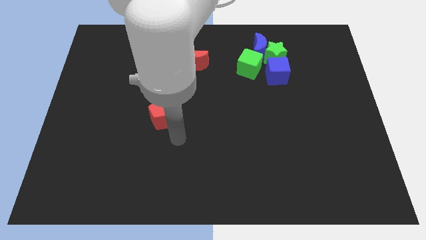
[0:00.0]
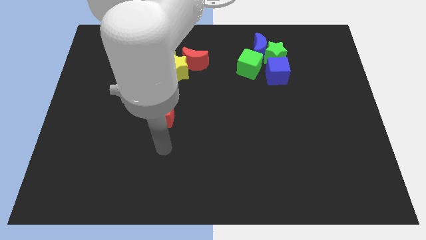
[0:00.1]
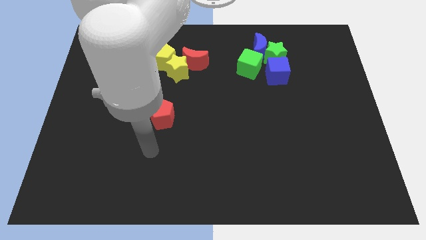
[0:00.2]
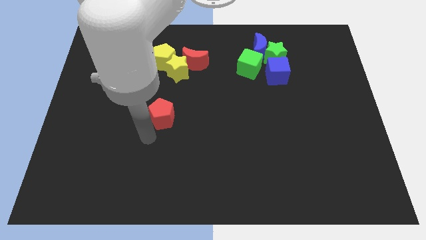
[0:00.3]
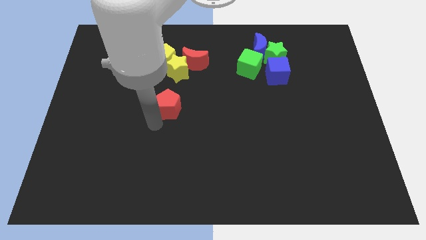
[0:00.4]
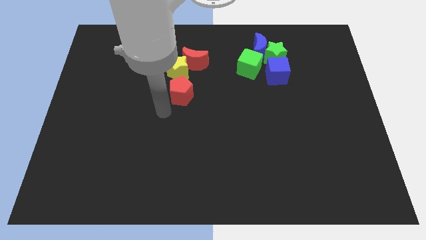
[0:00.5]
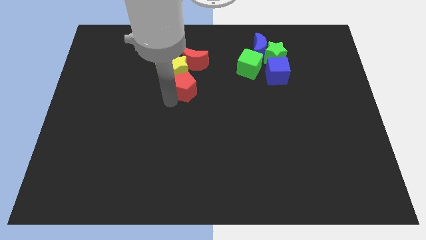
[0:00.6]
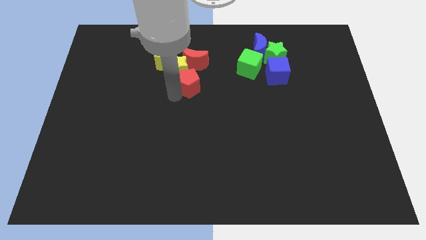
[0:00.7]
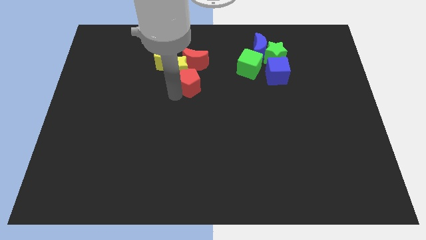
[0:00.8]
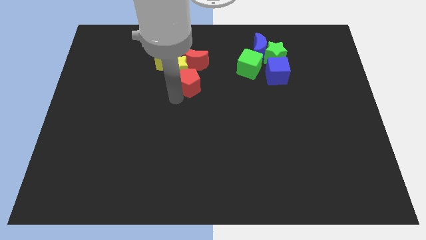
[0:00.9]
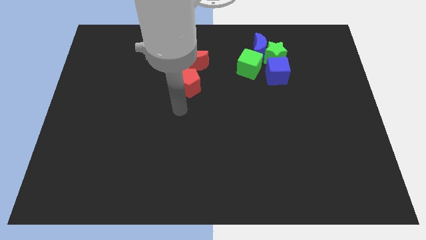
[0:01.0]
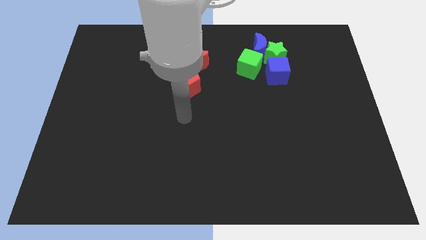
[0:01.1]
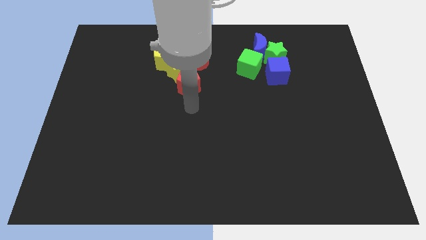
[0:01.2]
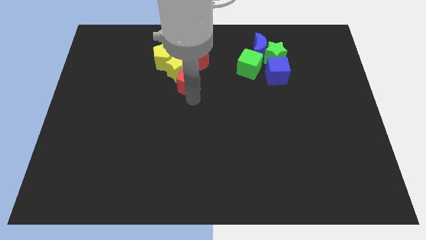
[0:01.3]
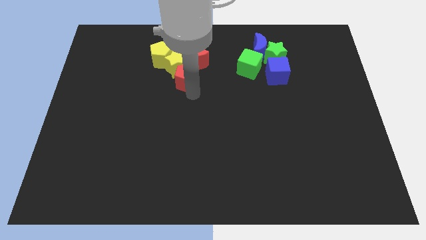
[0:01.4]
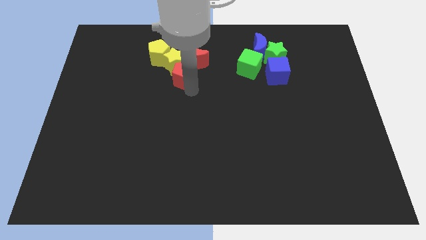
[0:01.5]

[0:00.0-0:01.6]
push the red pentagon into the yellow star

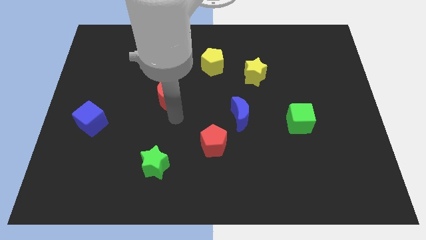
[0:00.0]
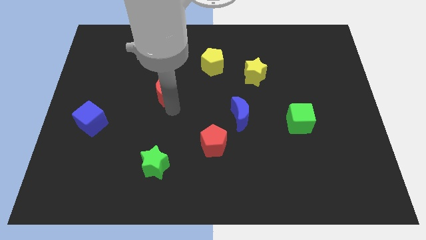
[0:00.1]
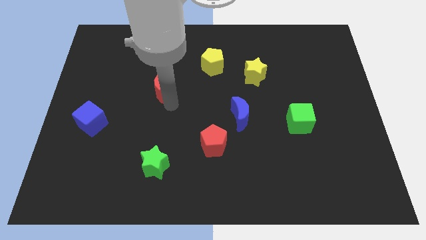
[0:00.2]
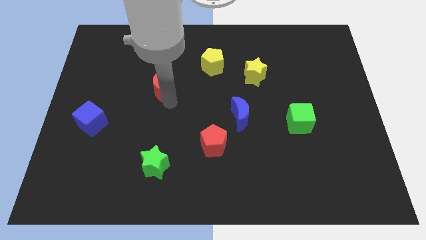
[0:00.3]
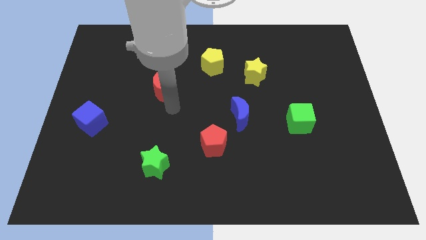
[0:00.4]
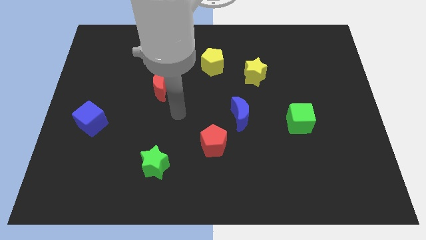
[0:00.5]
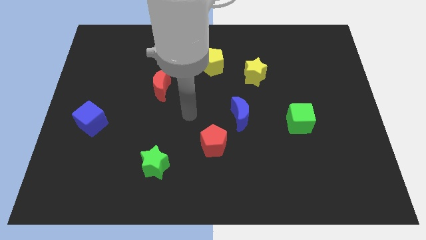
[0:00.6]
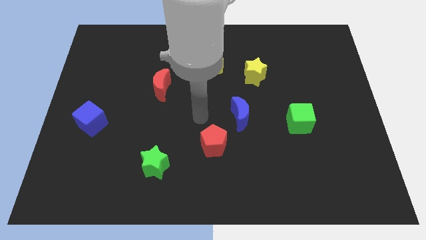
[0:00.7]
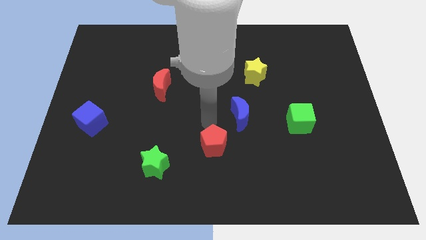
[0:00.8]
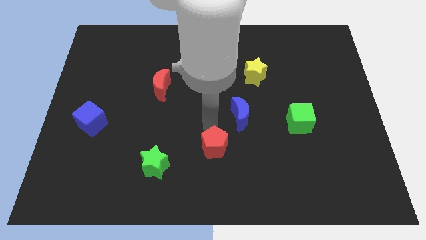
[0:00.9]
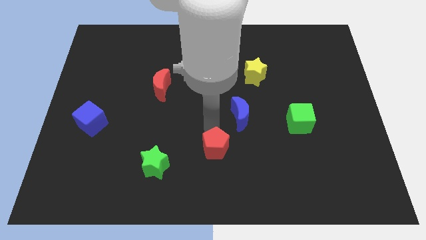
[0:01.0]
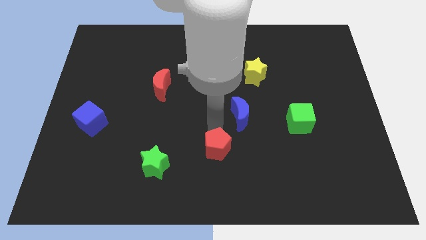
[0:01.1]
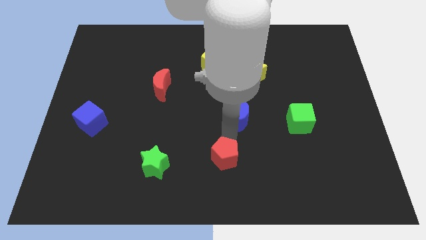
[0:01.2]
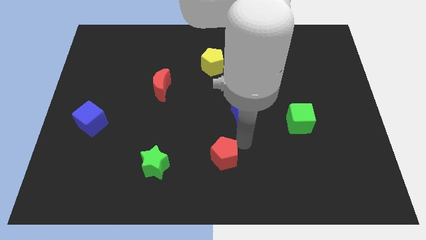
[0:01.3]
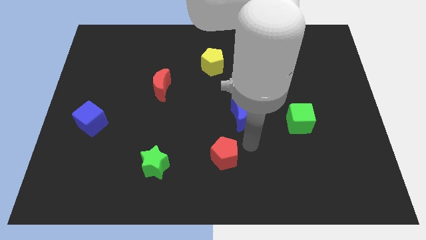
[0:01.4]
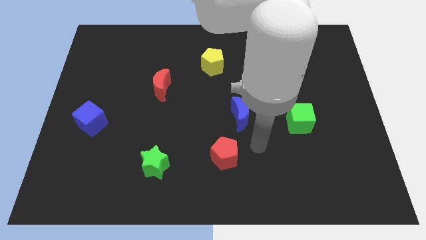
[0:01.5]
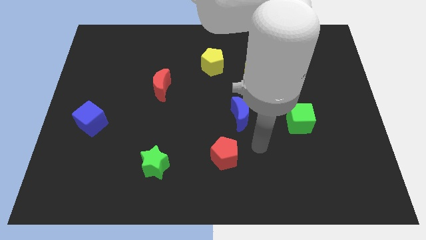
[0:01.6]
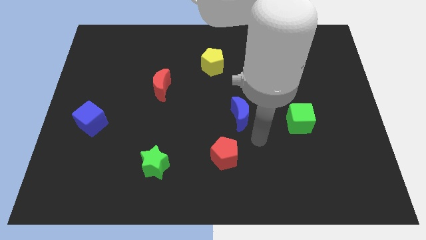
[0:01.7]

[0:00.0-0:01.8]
place the red pentagon slightly down

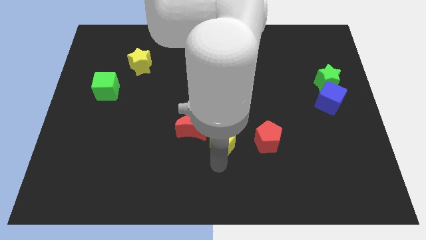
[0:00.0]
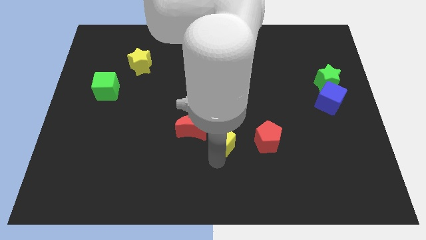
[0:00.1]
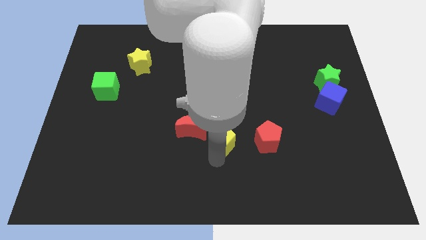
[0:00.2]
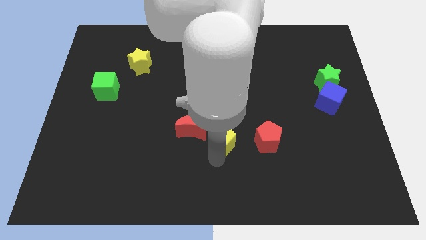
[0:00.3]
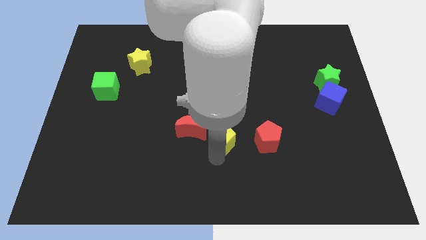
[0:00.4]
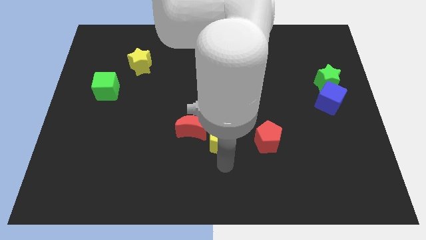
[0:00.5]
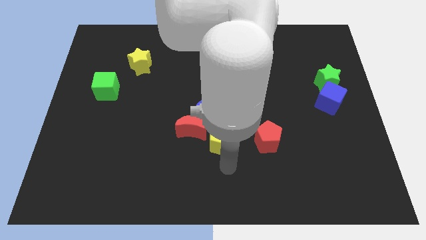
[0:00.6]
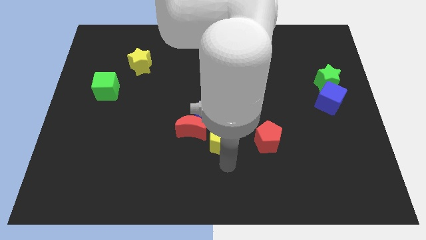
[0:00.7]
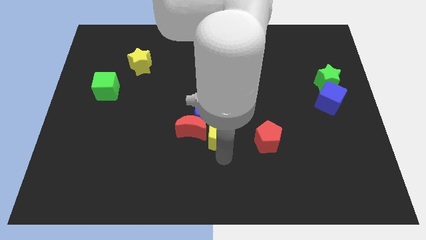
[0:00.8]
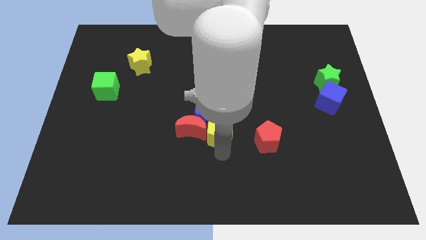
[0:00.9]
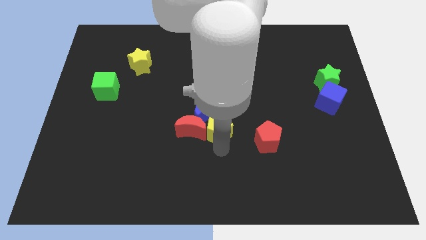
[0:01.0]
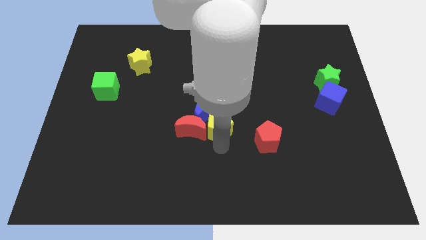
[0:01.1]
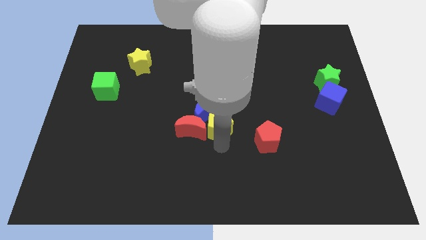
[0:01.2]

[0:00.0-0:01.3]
place the yellow pentagon right to the red crescent

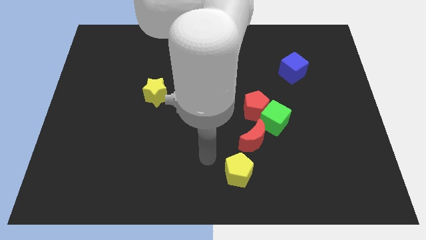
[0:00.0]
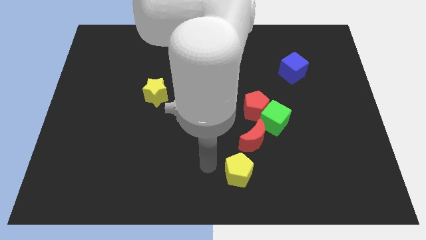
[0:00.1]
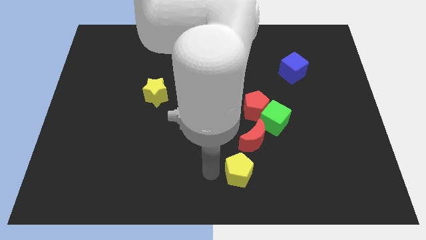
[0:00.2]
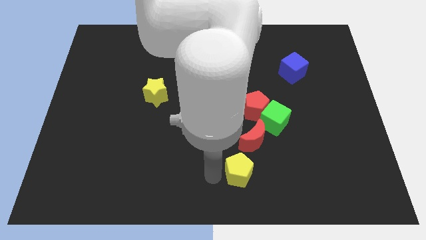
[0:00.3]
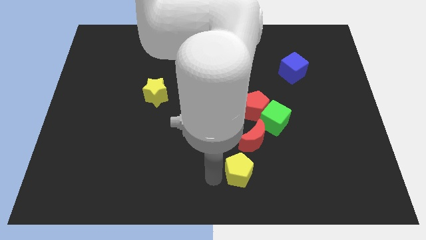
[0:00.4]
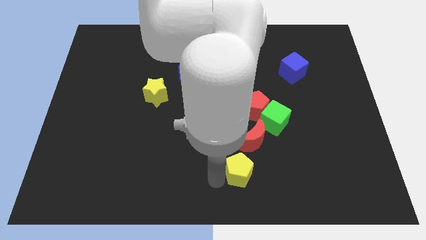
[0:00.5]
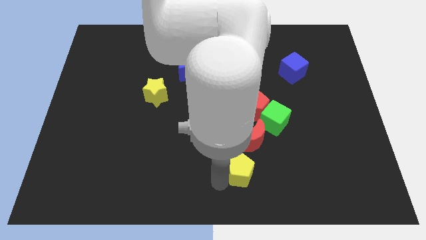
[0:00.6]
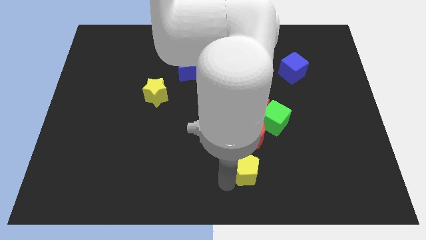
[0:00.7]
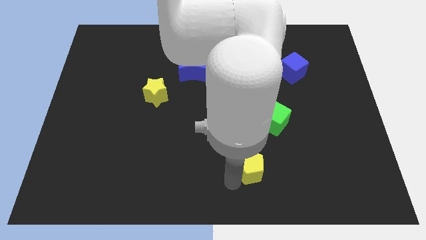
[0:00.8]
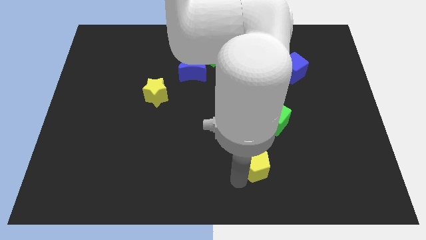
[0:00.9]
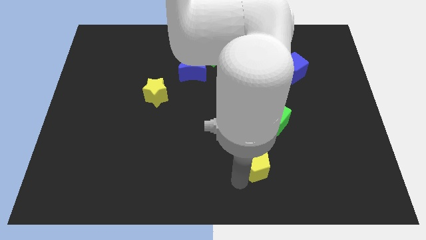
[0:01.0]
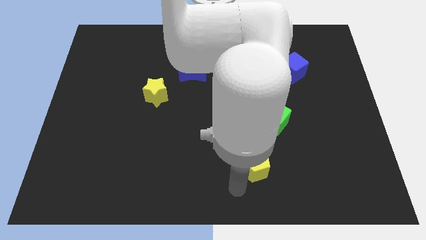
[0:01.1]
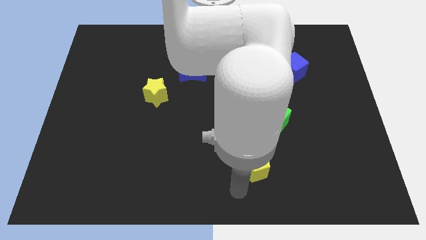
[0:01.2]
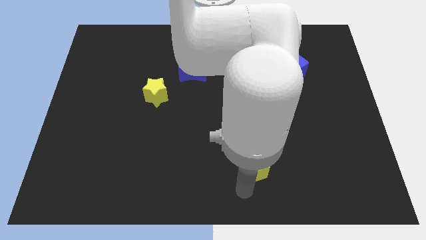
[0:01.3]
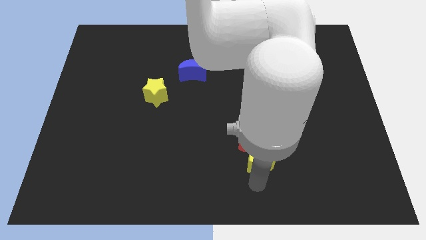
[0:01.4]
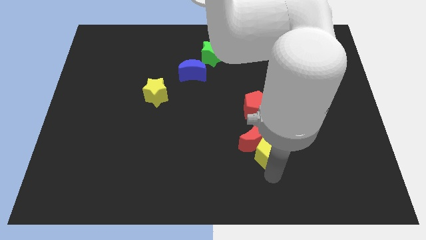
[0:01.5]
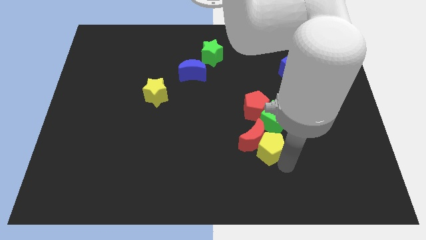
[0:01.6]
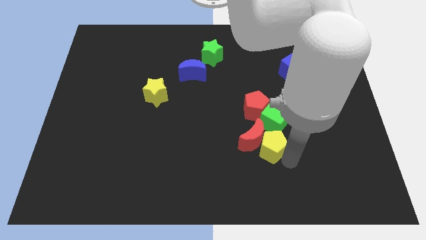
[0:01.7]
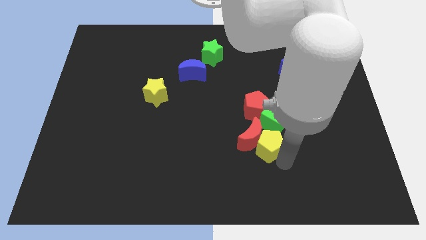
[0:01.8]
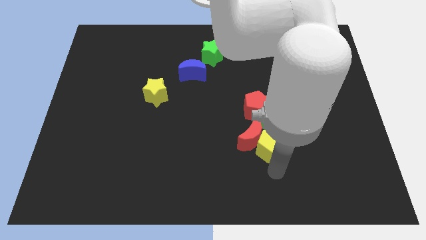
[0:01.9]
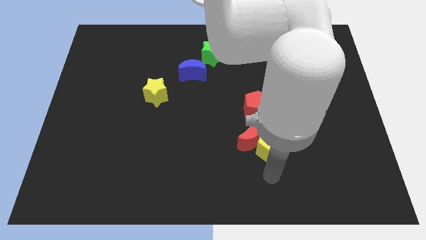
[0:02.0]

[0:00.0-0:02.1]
push the yellow pentagon towards the bottom right side of the red crescent

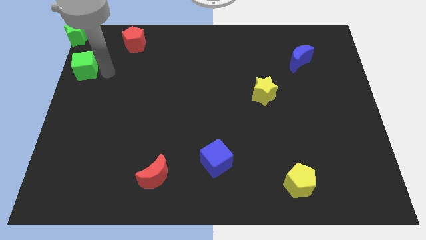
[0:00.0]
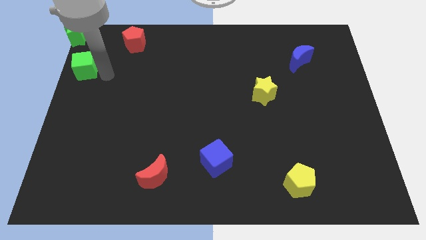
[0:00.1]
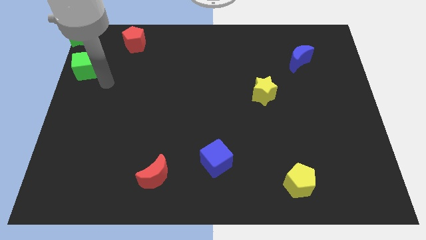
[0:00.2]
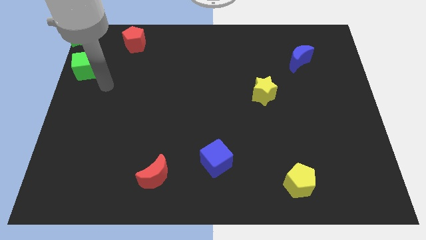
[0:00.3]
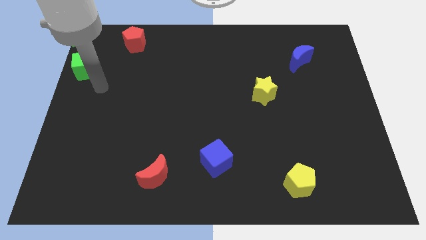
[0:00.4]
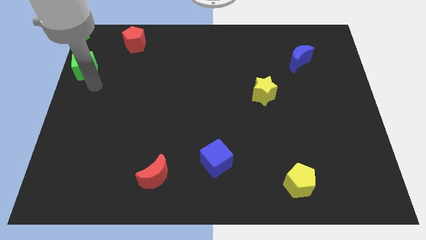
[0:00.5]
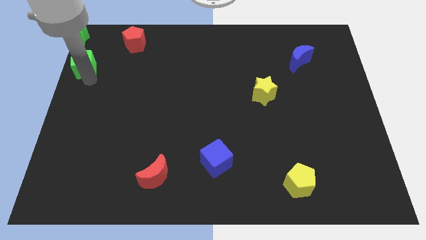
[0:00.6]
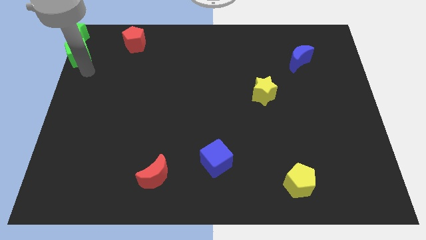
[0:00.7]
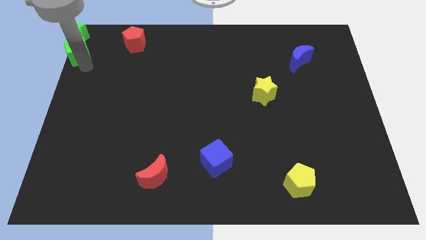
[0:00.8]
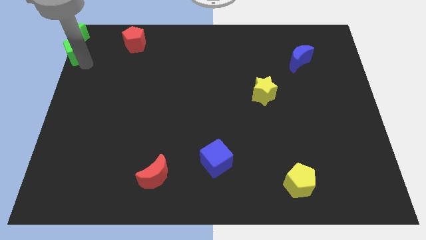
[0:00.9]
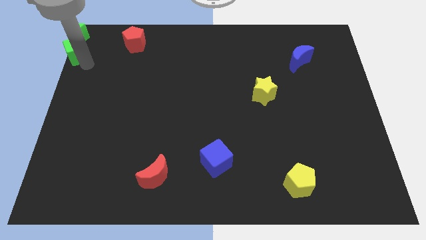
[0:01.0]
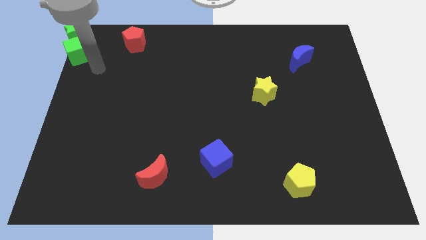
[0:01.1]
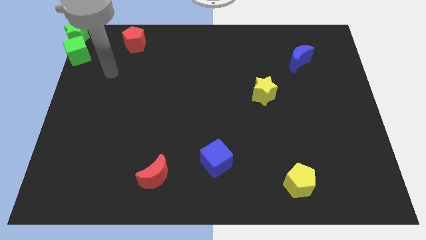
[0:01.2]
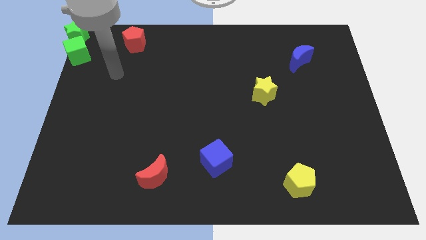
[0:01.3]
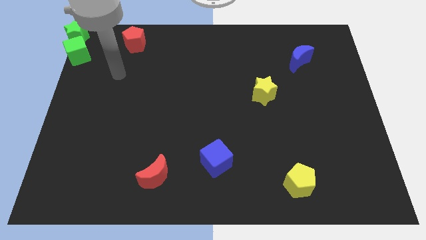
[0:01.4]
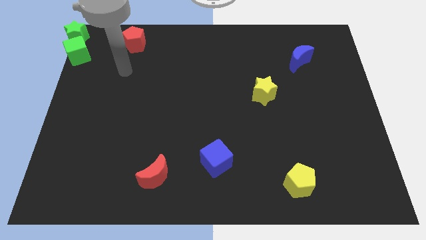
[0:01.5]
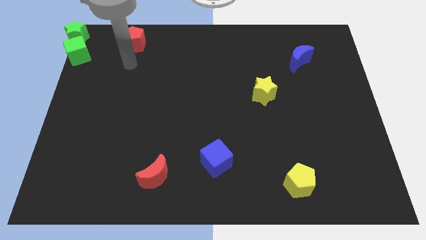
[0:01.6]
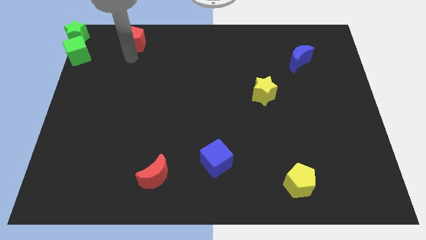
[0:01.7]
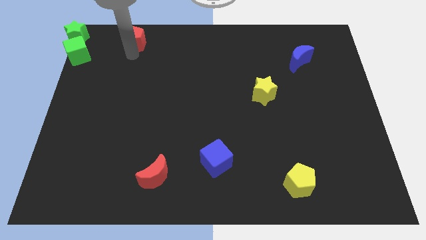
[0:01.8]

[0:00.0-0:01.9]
slide the green cube to the bottom of the green star

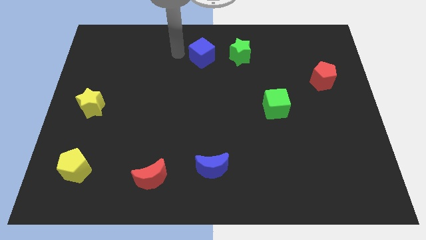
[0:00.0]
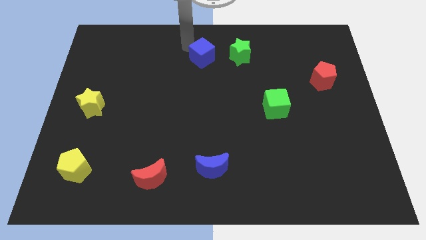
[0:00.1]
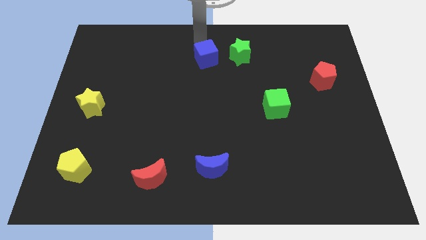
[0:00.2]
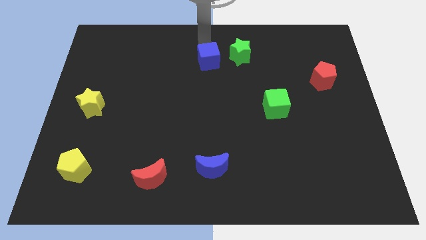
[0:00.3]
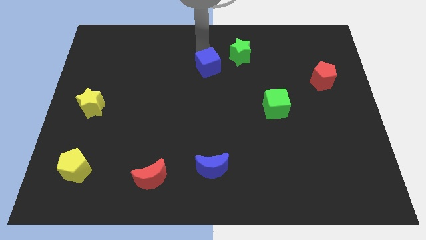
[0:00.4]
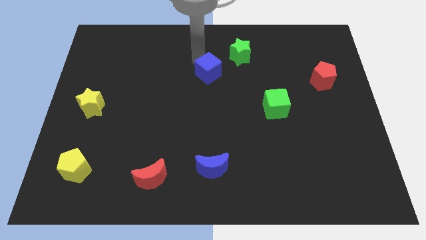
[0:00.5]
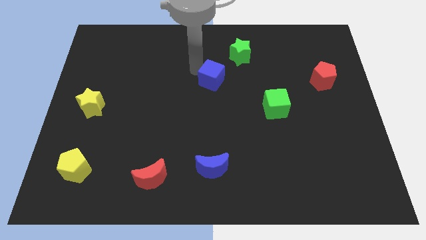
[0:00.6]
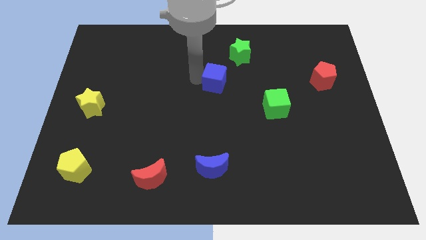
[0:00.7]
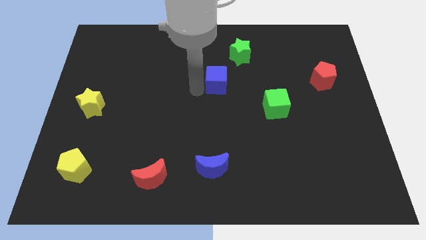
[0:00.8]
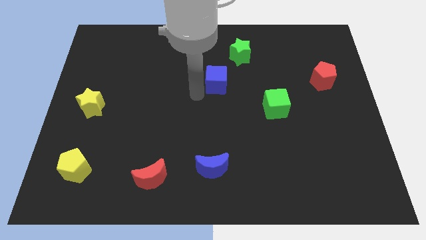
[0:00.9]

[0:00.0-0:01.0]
slightly push the blue cube towards the center of the board
